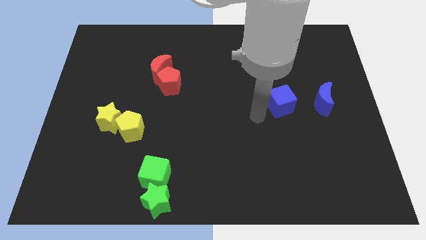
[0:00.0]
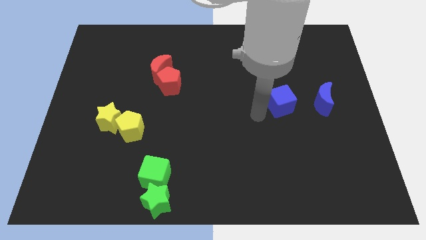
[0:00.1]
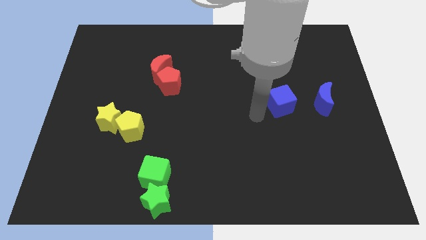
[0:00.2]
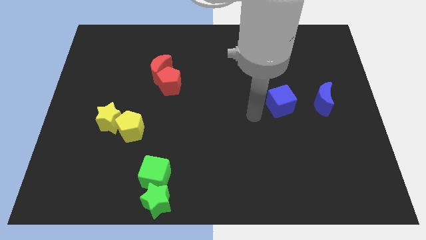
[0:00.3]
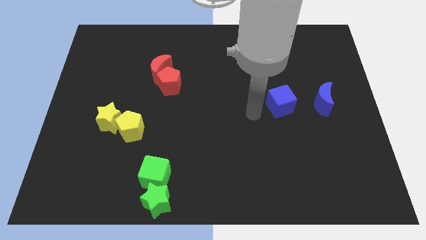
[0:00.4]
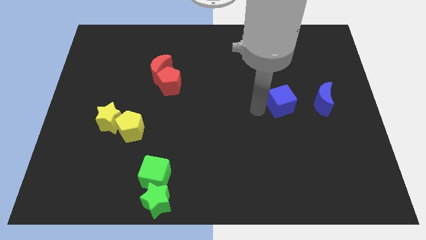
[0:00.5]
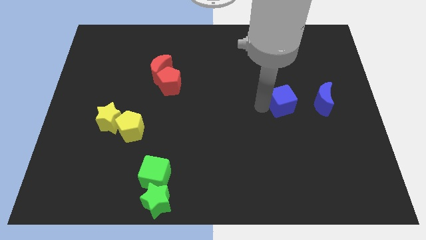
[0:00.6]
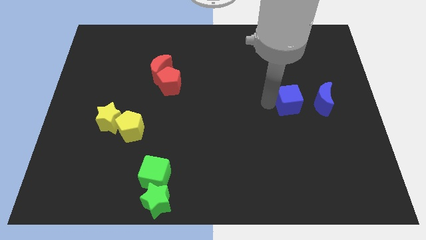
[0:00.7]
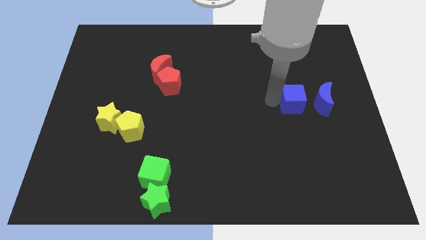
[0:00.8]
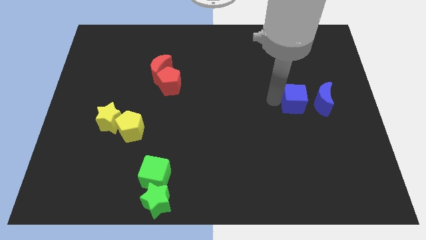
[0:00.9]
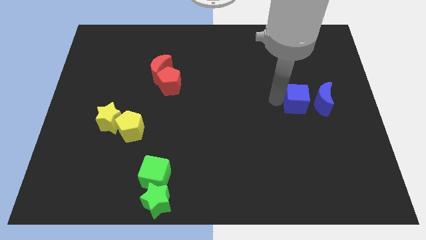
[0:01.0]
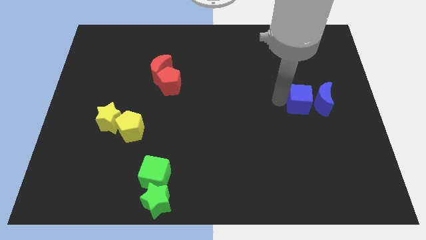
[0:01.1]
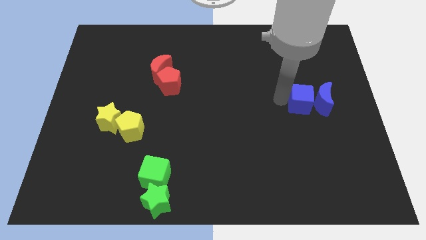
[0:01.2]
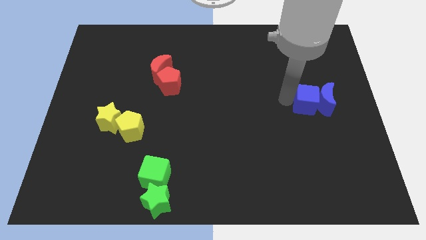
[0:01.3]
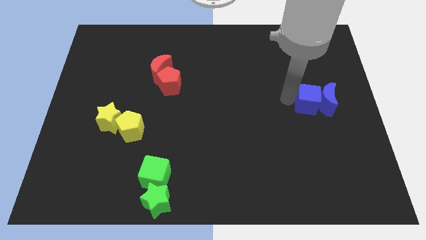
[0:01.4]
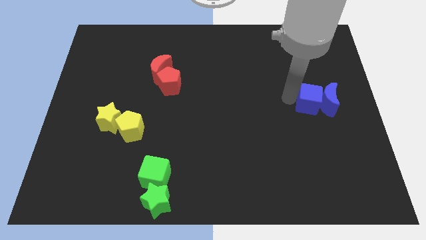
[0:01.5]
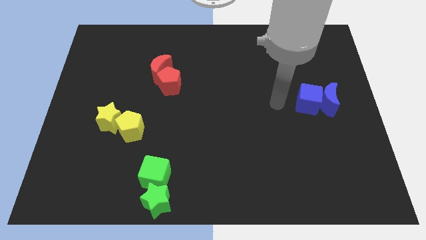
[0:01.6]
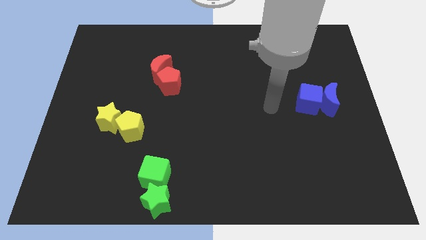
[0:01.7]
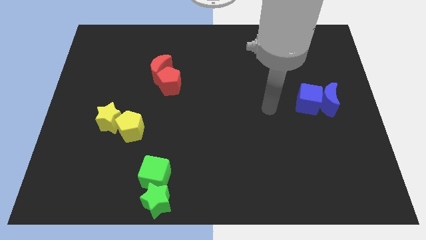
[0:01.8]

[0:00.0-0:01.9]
push the blue cube into the blue crescent towards the right center

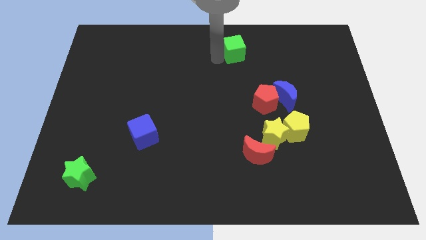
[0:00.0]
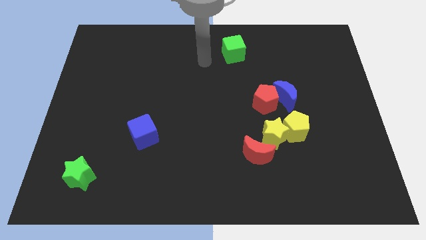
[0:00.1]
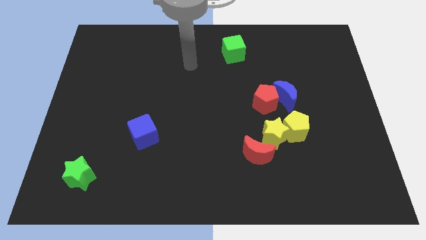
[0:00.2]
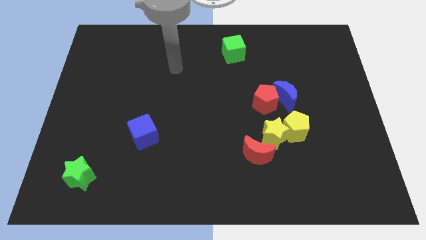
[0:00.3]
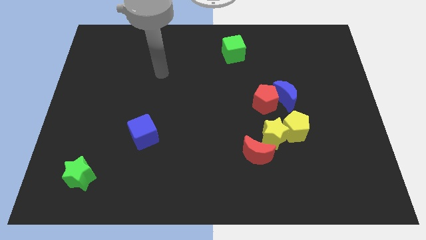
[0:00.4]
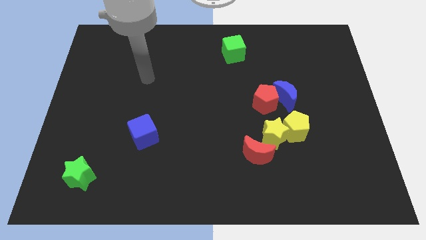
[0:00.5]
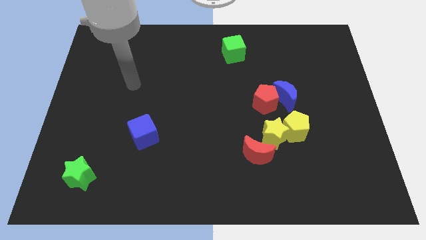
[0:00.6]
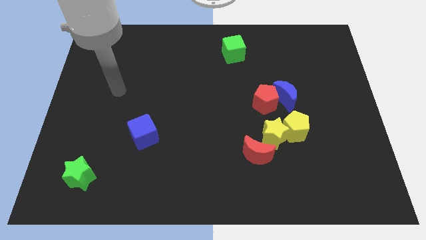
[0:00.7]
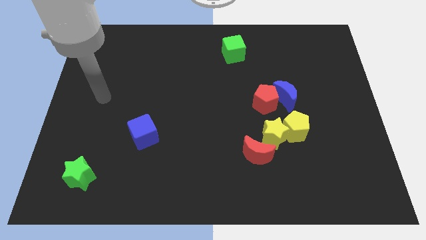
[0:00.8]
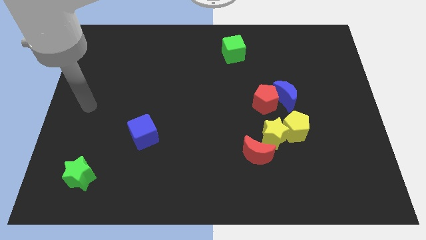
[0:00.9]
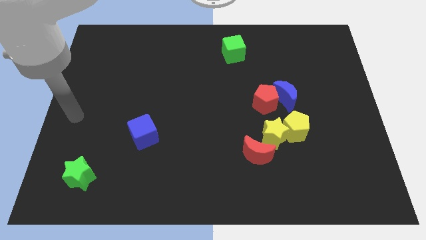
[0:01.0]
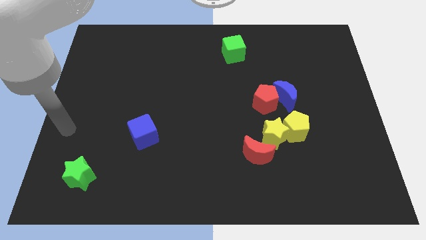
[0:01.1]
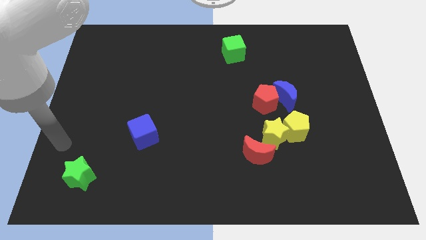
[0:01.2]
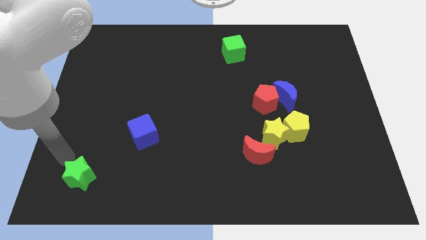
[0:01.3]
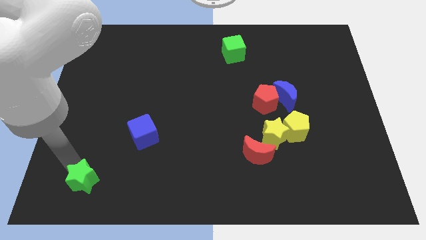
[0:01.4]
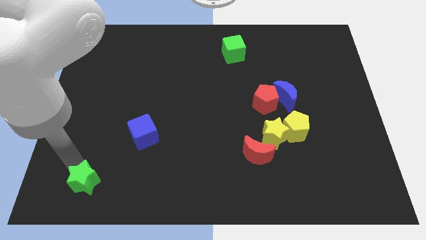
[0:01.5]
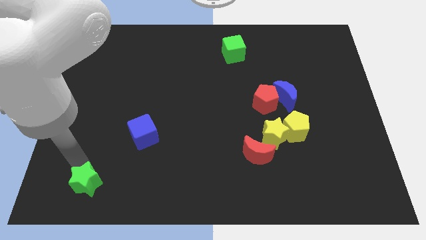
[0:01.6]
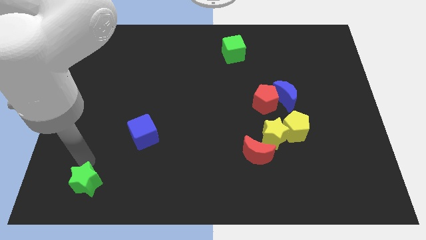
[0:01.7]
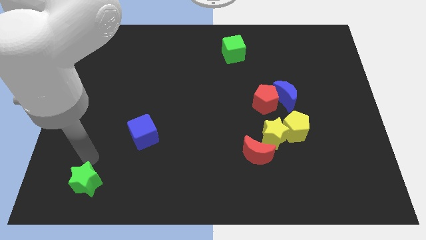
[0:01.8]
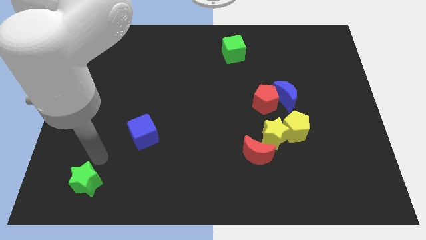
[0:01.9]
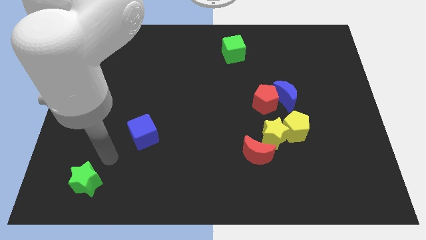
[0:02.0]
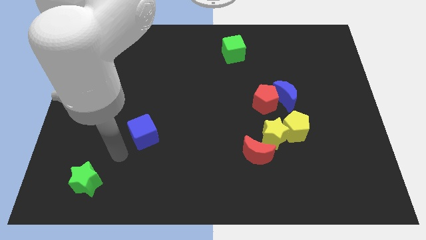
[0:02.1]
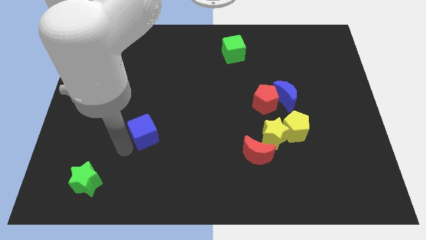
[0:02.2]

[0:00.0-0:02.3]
touch the left side of the green star with the arm

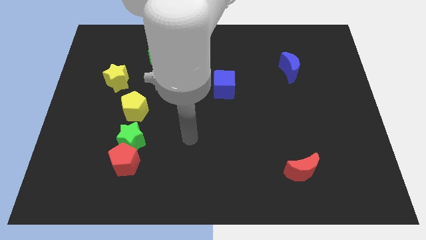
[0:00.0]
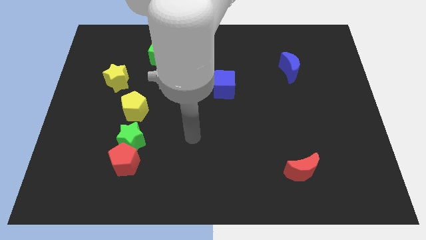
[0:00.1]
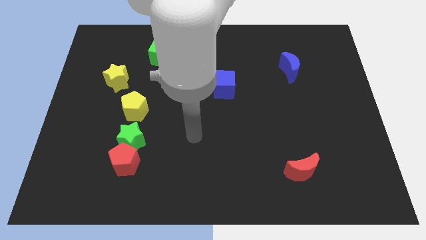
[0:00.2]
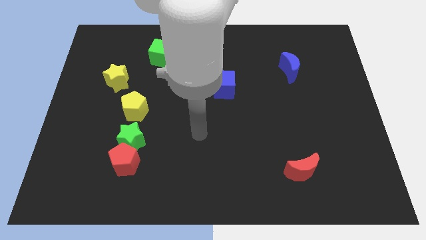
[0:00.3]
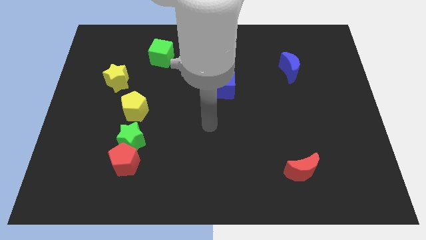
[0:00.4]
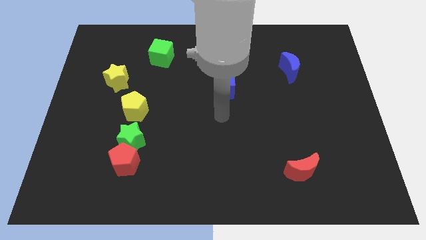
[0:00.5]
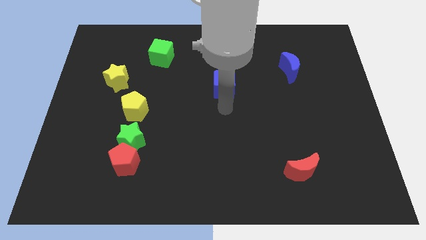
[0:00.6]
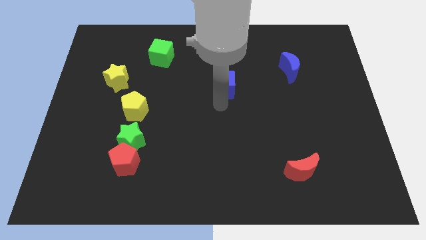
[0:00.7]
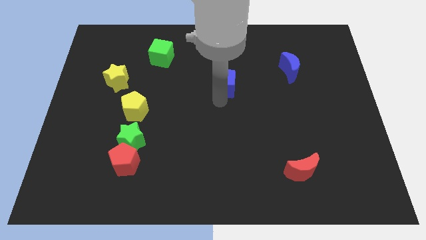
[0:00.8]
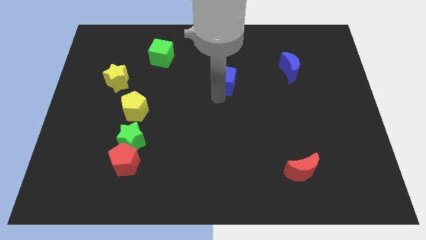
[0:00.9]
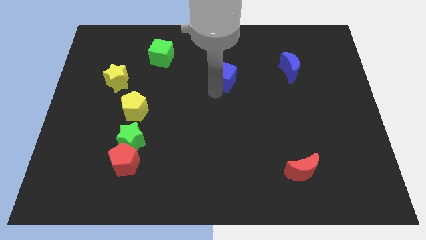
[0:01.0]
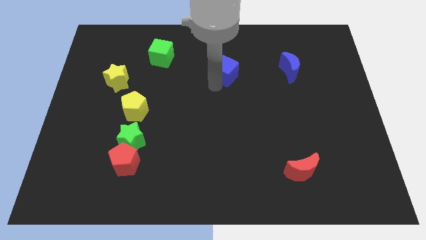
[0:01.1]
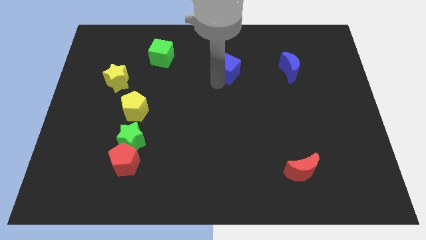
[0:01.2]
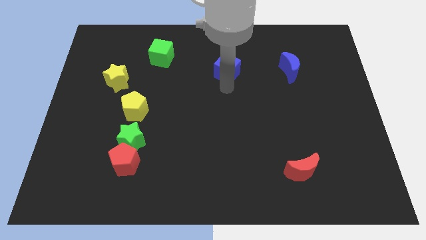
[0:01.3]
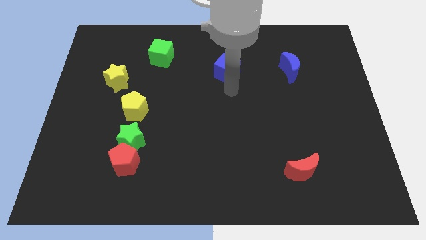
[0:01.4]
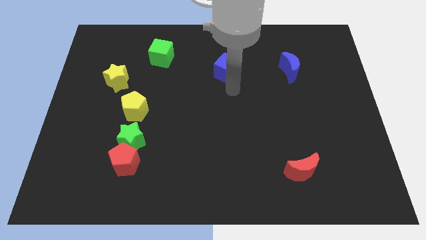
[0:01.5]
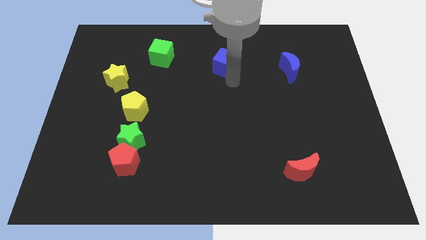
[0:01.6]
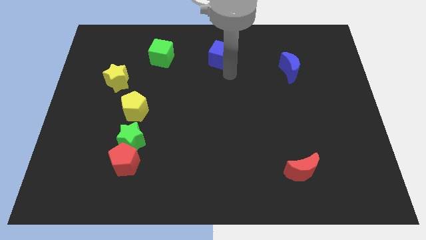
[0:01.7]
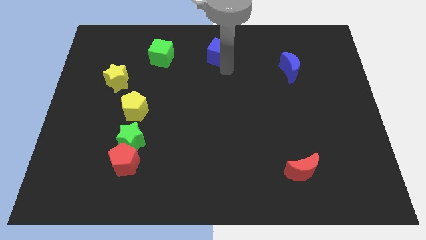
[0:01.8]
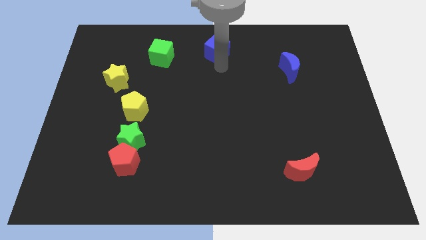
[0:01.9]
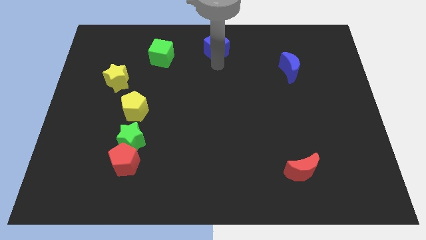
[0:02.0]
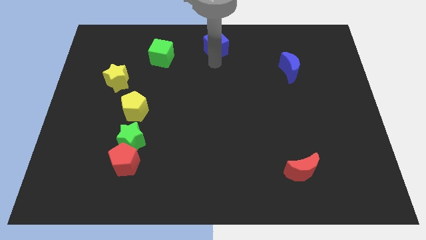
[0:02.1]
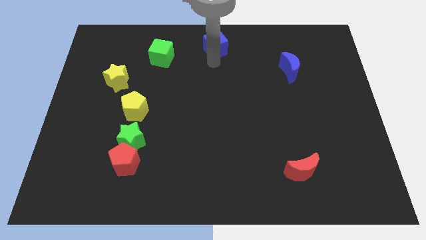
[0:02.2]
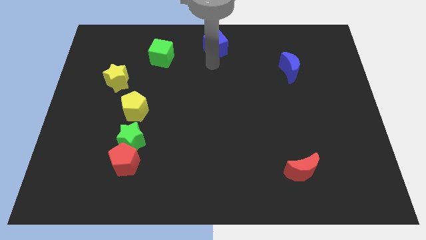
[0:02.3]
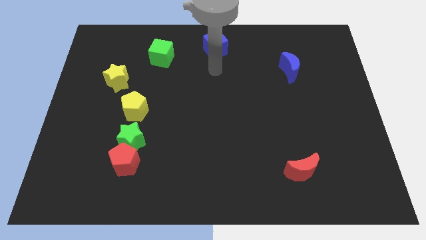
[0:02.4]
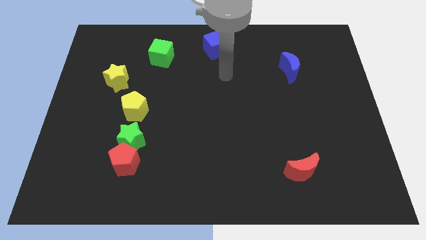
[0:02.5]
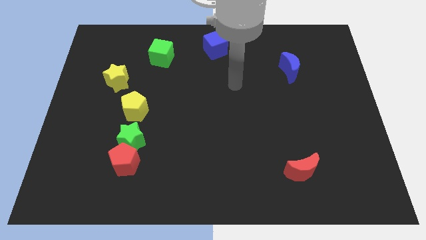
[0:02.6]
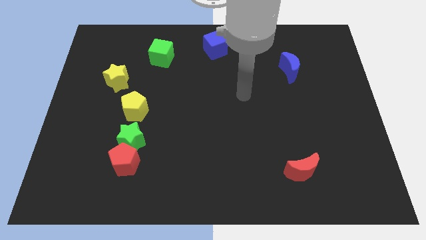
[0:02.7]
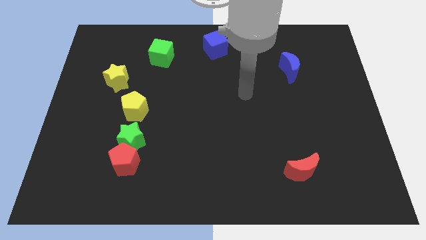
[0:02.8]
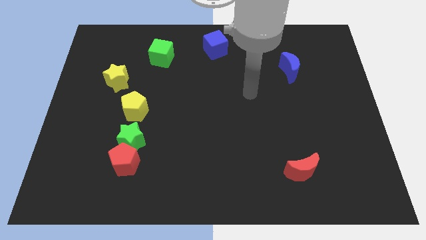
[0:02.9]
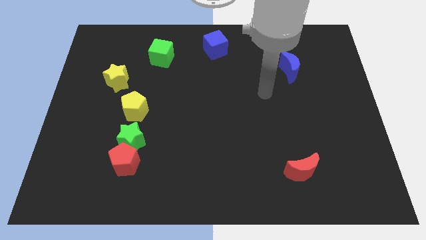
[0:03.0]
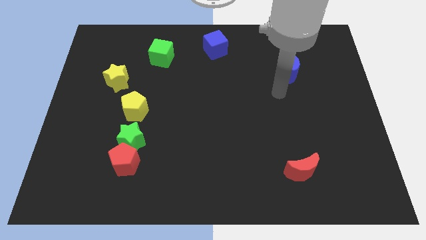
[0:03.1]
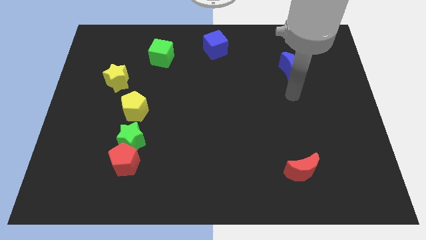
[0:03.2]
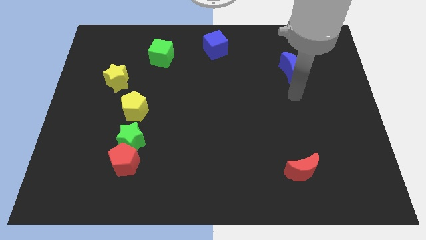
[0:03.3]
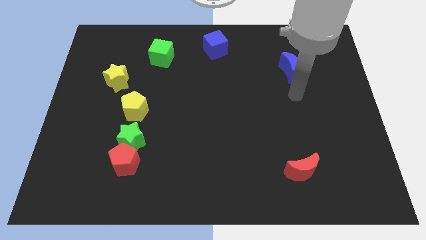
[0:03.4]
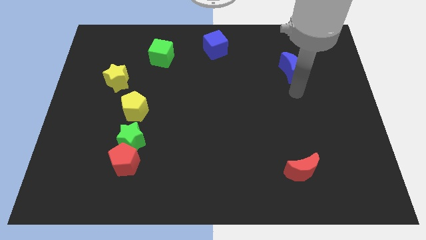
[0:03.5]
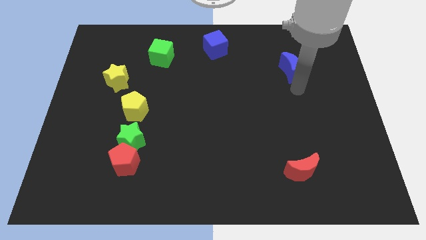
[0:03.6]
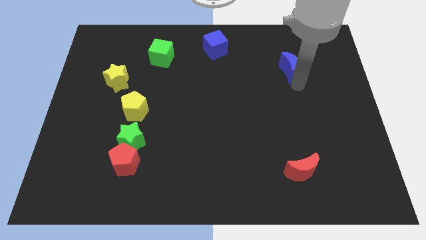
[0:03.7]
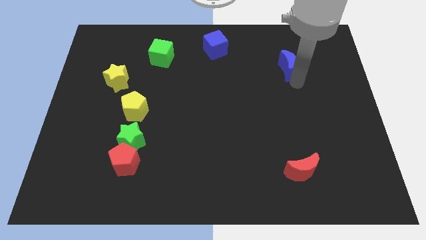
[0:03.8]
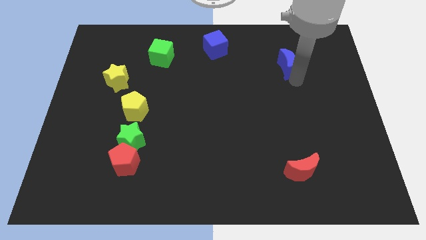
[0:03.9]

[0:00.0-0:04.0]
push blue square blue moon towards top

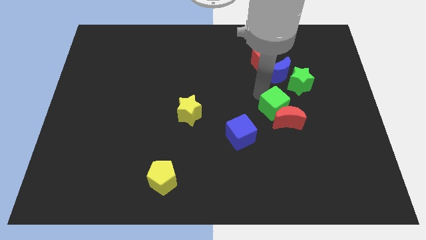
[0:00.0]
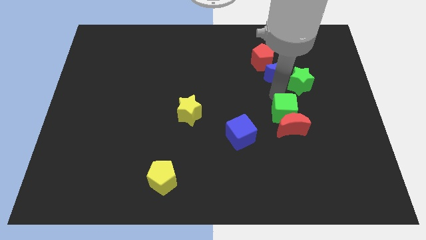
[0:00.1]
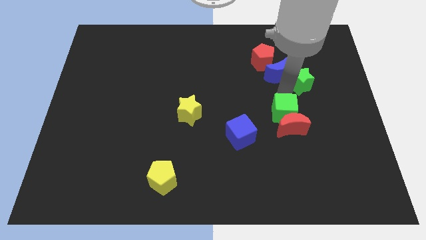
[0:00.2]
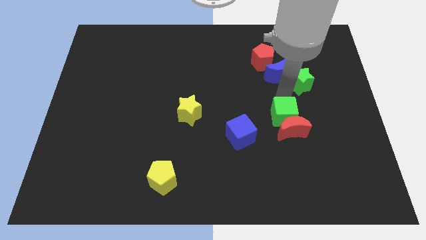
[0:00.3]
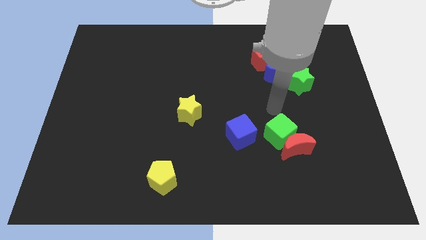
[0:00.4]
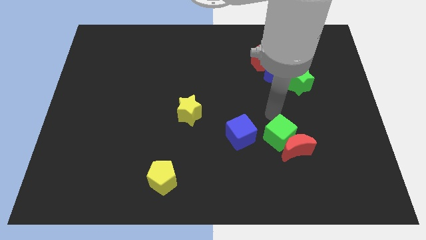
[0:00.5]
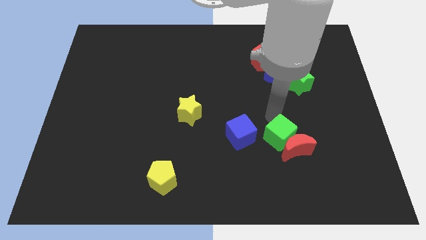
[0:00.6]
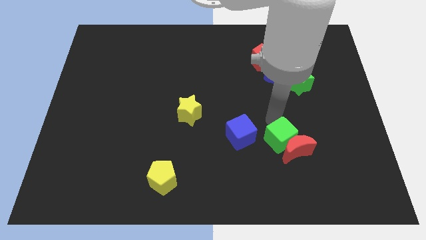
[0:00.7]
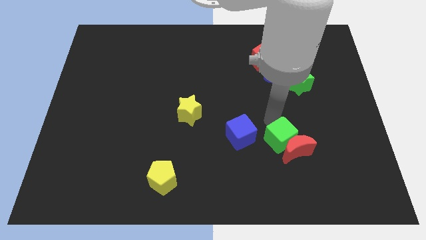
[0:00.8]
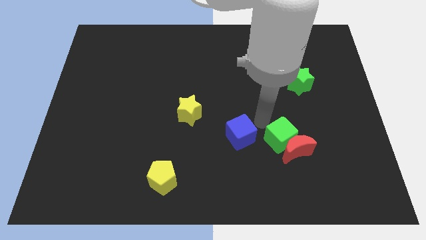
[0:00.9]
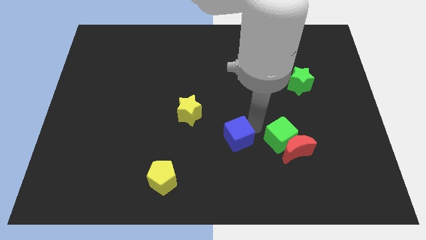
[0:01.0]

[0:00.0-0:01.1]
push green cube along with red moon slightly down
